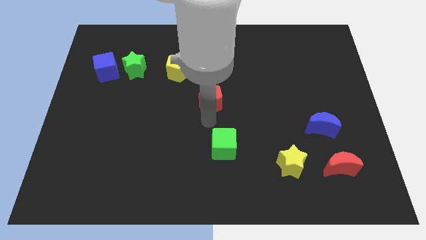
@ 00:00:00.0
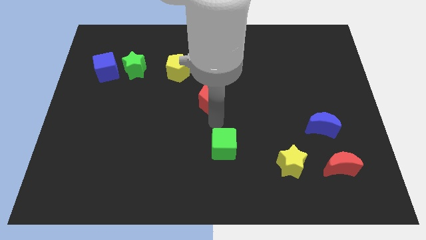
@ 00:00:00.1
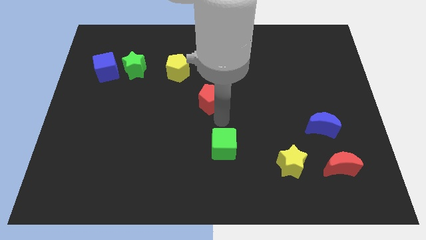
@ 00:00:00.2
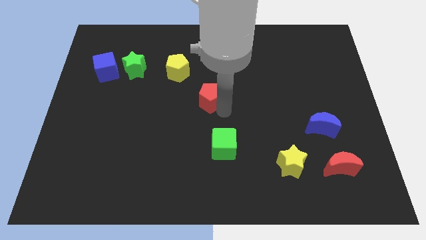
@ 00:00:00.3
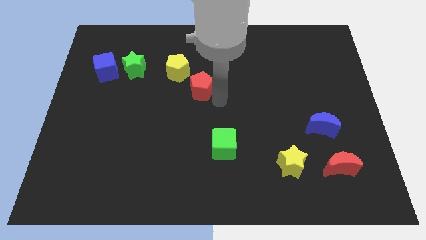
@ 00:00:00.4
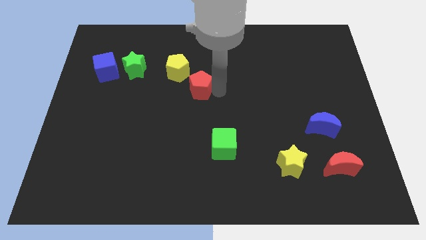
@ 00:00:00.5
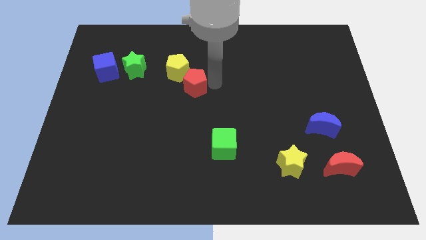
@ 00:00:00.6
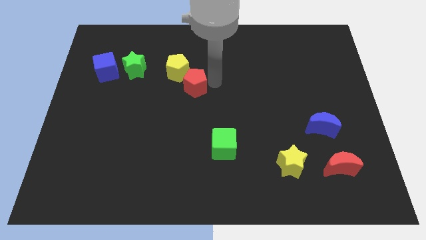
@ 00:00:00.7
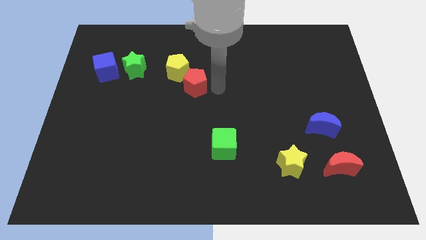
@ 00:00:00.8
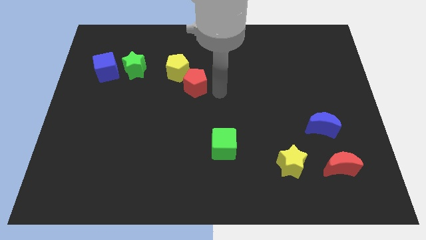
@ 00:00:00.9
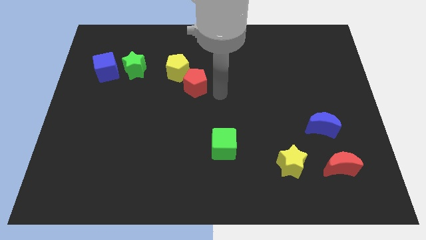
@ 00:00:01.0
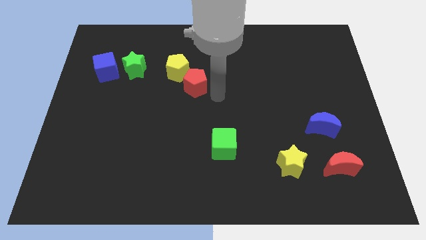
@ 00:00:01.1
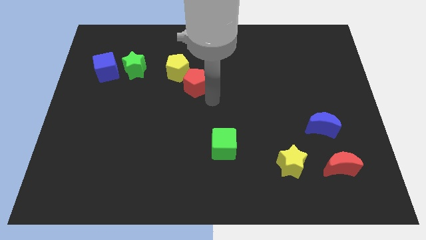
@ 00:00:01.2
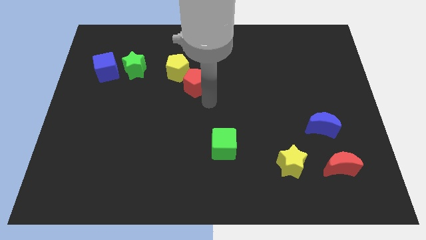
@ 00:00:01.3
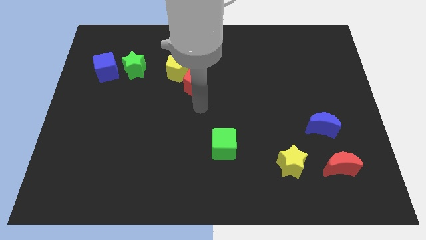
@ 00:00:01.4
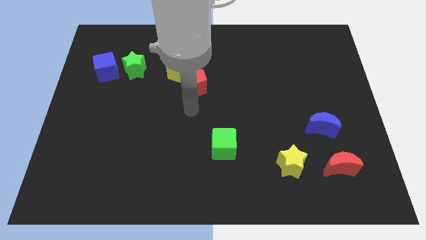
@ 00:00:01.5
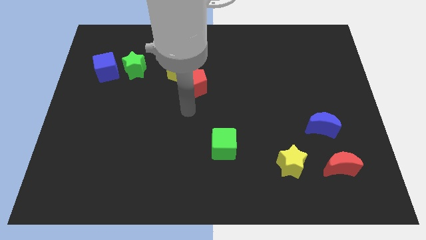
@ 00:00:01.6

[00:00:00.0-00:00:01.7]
push the red pentagon to the left corner side of the yellow pentagon

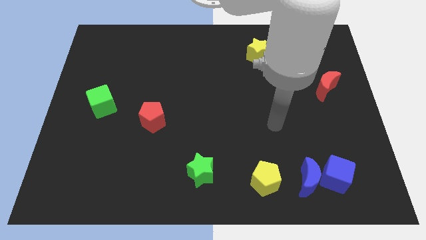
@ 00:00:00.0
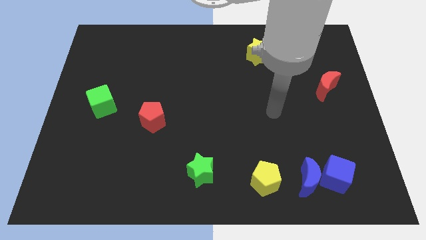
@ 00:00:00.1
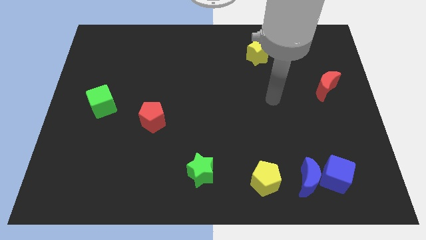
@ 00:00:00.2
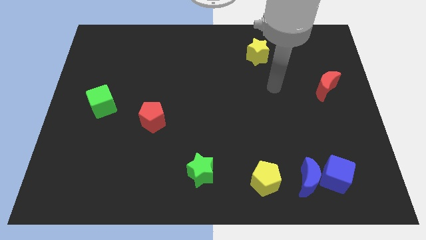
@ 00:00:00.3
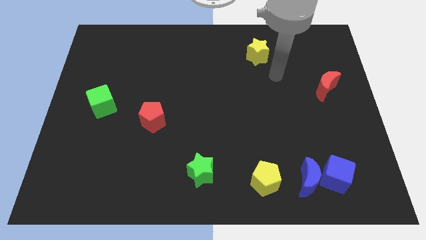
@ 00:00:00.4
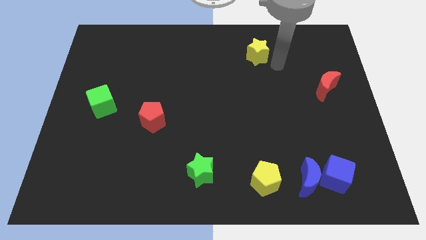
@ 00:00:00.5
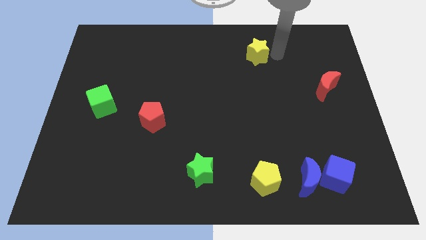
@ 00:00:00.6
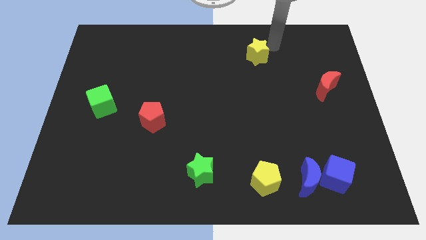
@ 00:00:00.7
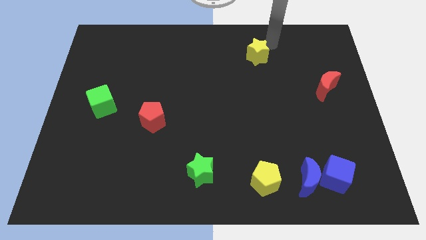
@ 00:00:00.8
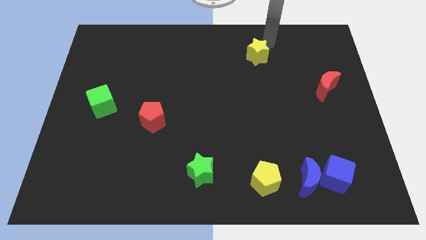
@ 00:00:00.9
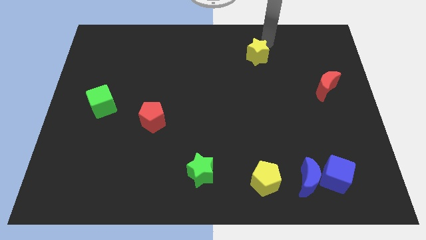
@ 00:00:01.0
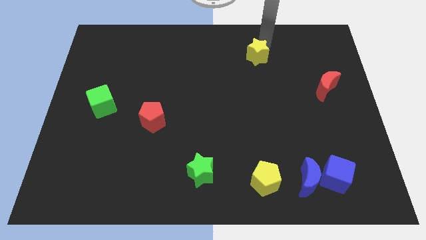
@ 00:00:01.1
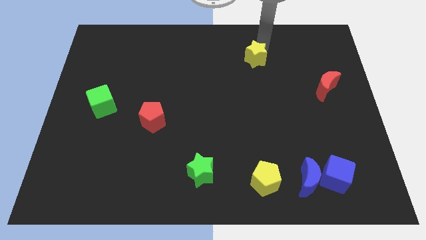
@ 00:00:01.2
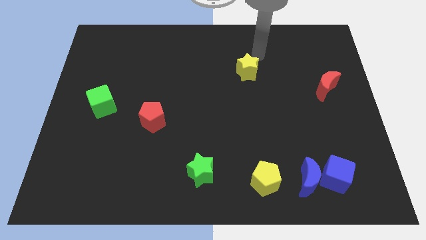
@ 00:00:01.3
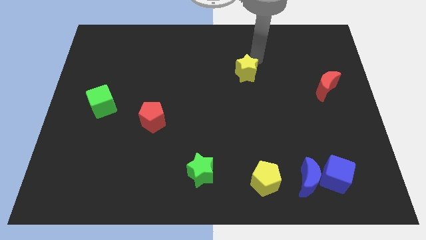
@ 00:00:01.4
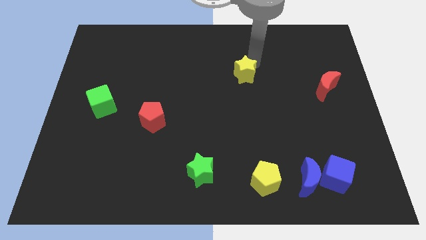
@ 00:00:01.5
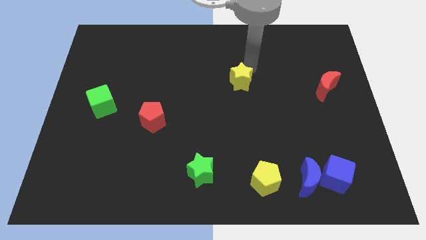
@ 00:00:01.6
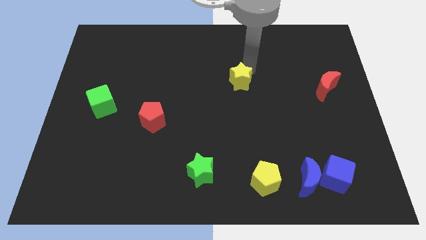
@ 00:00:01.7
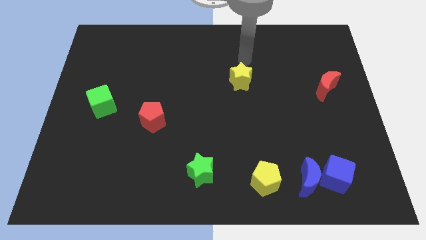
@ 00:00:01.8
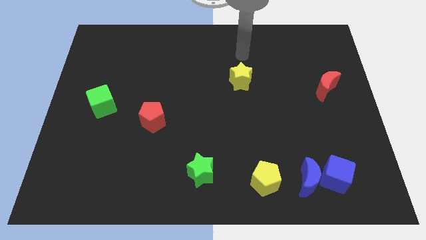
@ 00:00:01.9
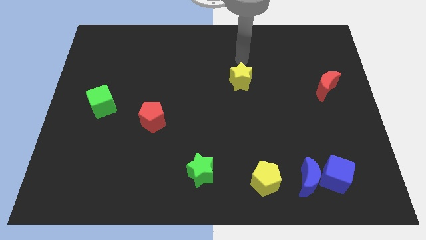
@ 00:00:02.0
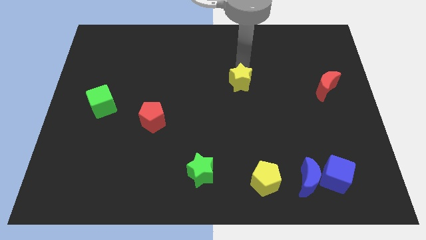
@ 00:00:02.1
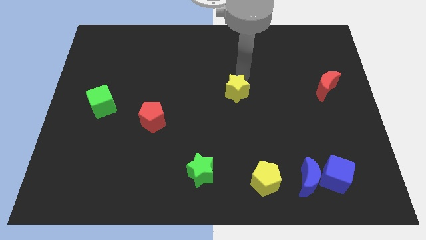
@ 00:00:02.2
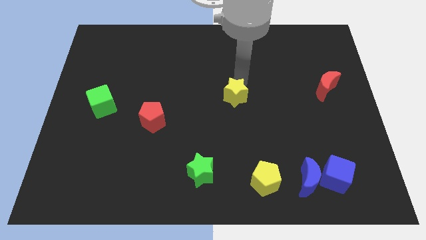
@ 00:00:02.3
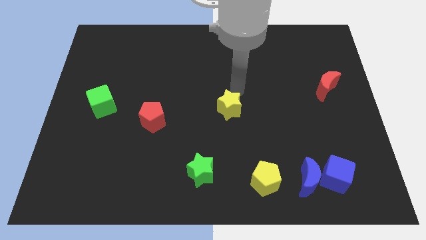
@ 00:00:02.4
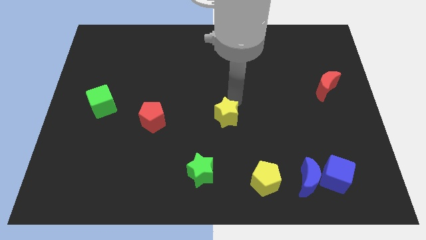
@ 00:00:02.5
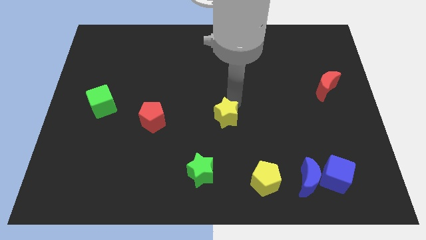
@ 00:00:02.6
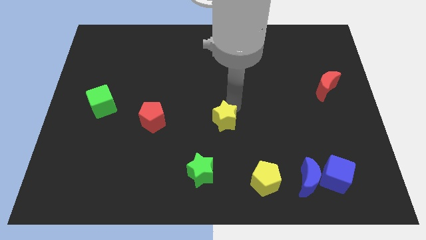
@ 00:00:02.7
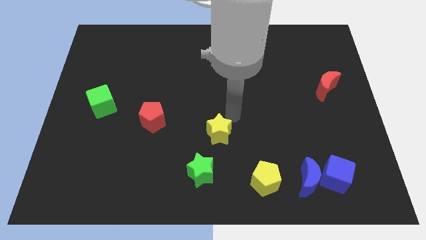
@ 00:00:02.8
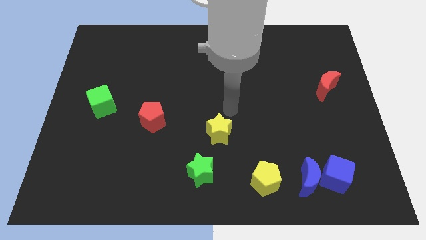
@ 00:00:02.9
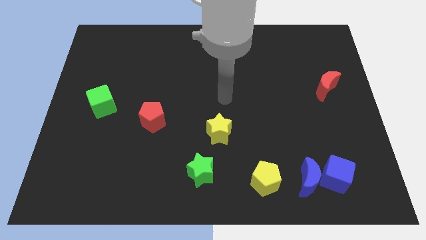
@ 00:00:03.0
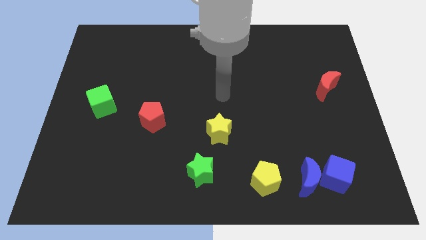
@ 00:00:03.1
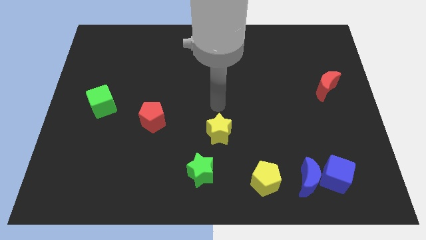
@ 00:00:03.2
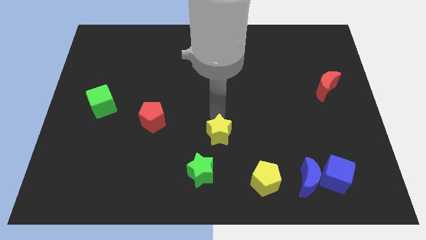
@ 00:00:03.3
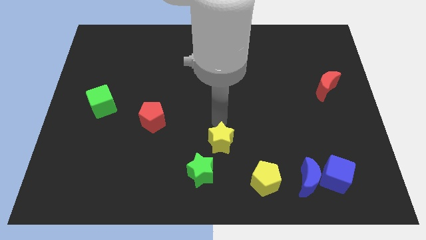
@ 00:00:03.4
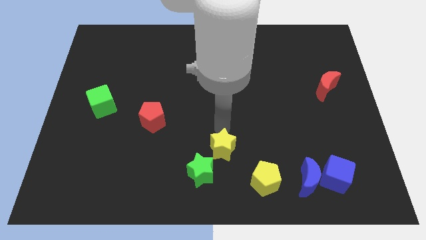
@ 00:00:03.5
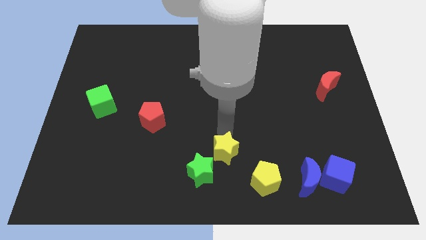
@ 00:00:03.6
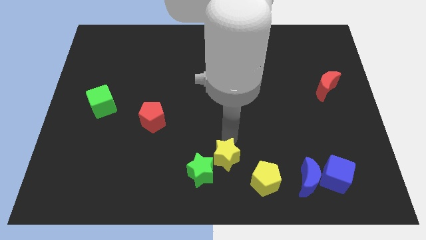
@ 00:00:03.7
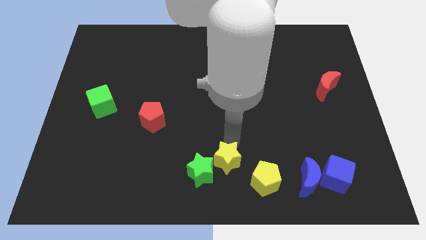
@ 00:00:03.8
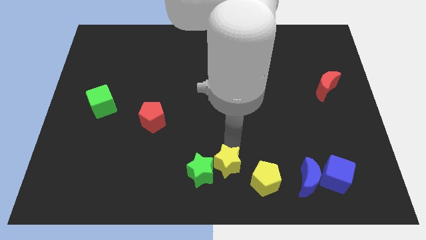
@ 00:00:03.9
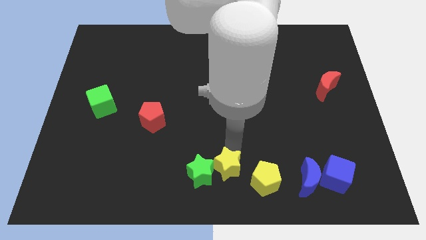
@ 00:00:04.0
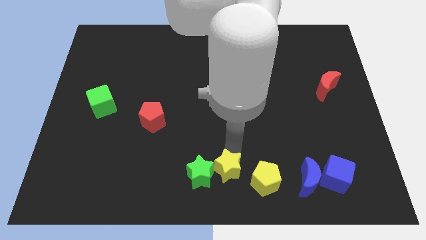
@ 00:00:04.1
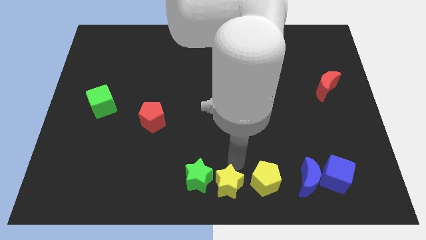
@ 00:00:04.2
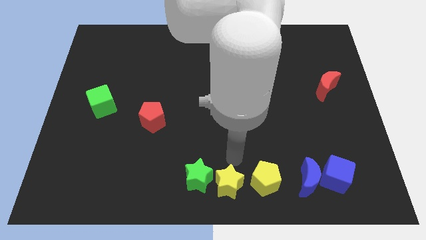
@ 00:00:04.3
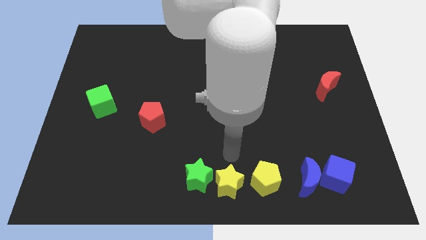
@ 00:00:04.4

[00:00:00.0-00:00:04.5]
place the yellow star in between green star and yellow pentagon

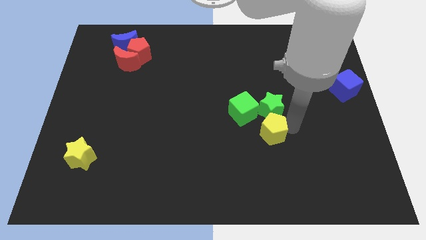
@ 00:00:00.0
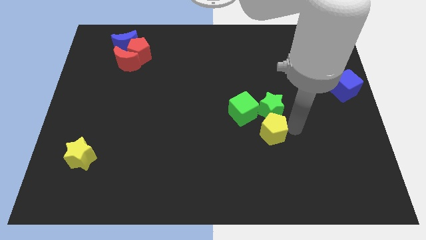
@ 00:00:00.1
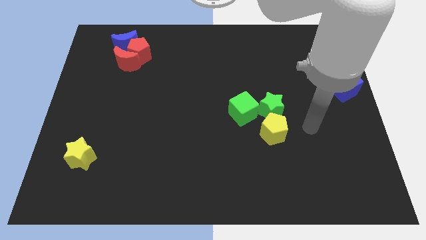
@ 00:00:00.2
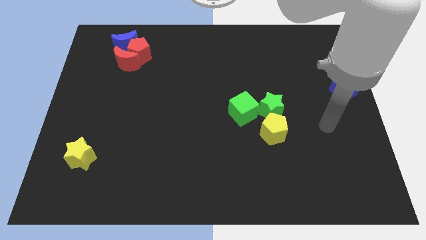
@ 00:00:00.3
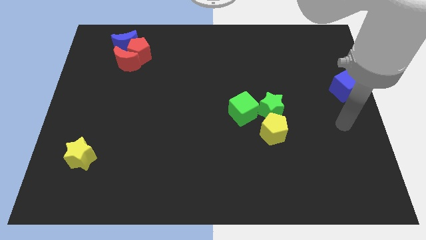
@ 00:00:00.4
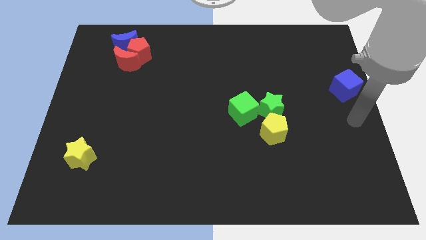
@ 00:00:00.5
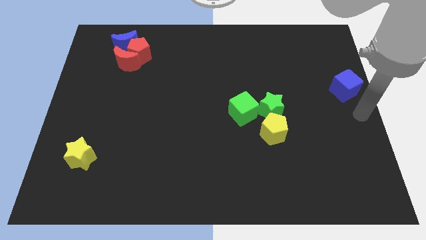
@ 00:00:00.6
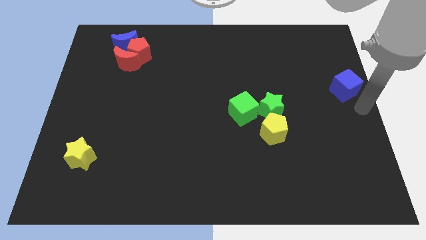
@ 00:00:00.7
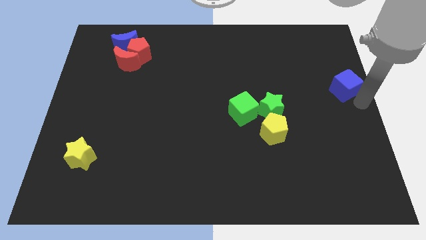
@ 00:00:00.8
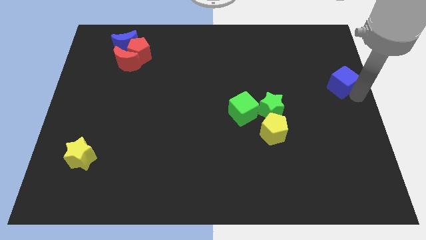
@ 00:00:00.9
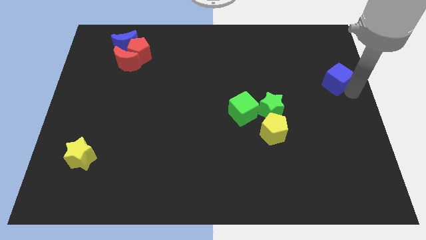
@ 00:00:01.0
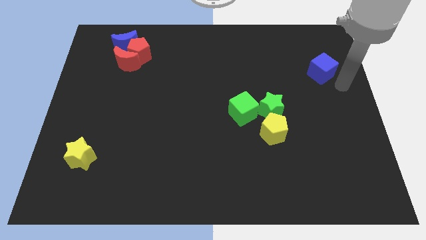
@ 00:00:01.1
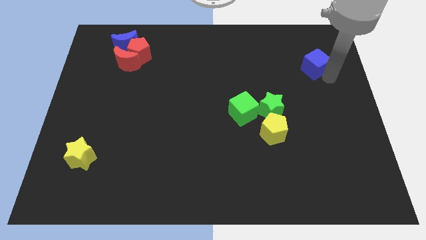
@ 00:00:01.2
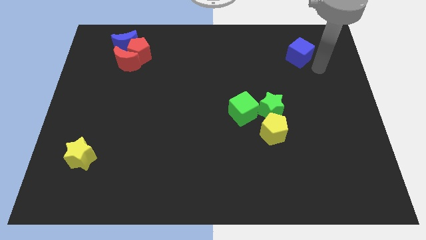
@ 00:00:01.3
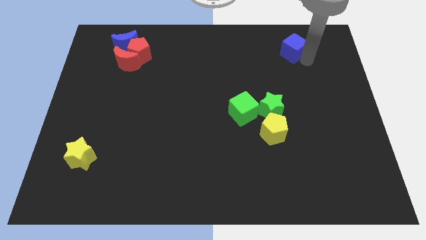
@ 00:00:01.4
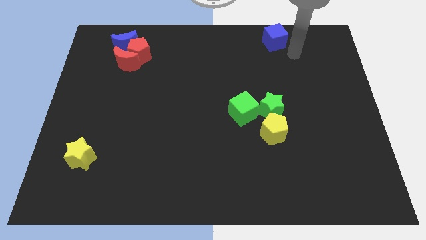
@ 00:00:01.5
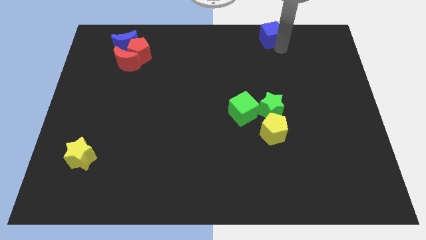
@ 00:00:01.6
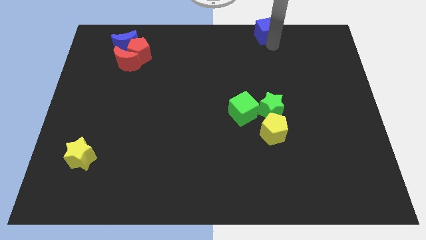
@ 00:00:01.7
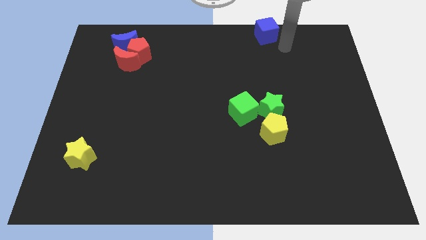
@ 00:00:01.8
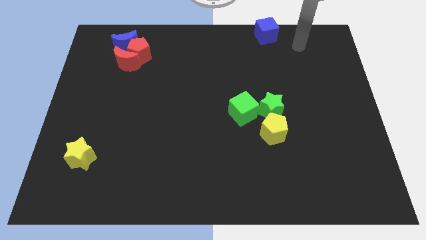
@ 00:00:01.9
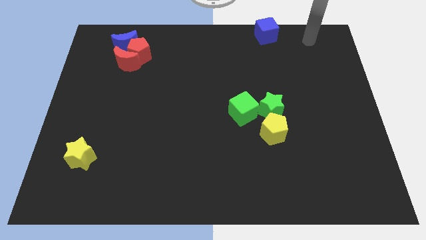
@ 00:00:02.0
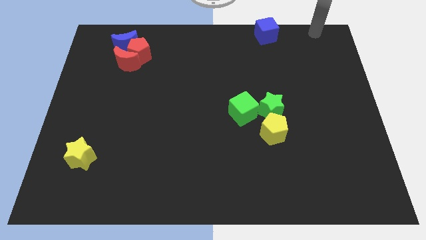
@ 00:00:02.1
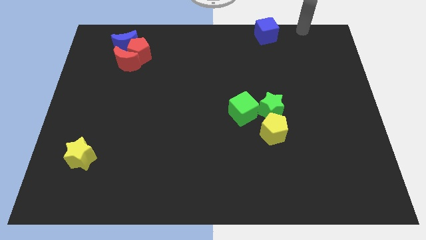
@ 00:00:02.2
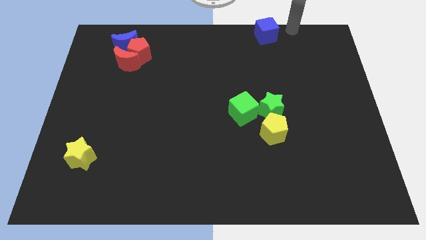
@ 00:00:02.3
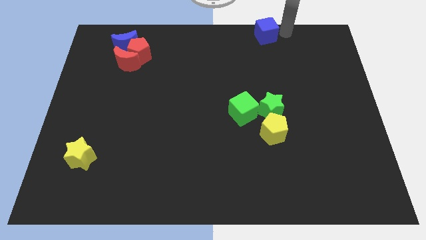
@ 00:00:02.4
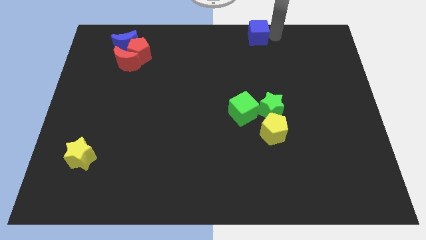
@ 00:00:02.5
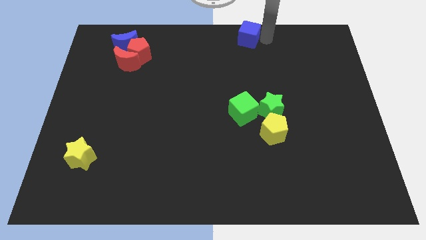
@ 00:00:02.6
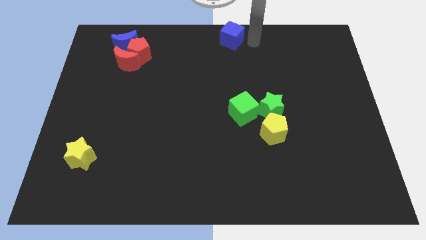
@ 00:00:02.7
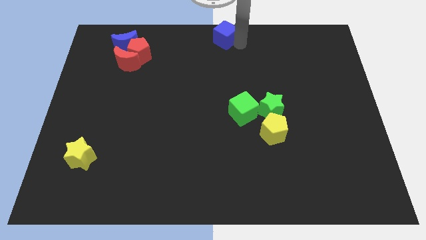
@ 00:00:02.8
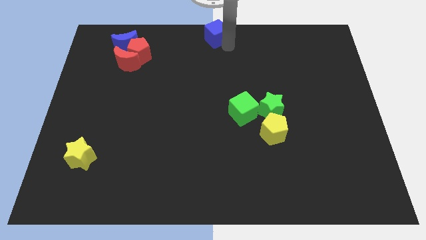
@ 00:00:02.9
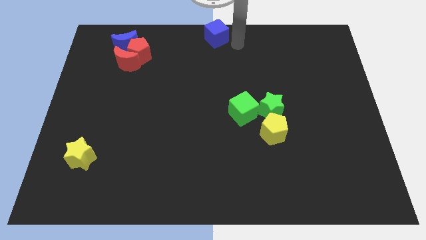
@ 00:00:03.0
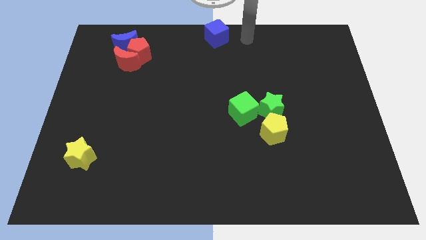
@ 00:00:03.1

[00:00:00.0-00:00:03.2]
move the blue cube diagonally to red blocks
